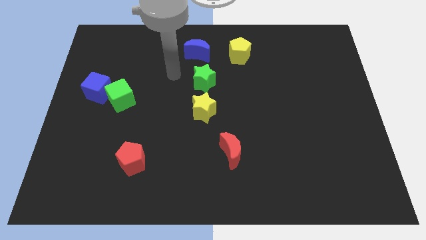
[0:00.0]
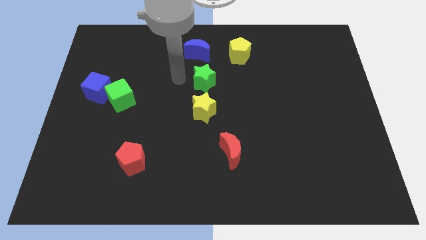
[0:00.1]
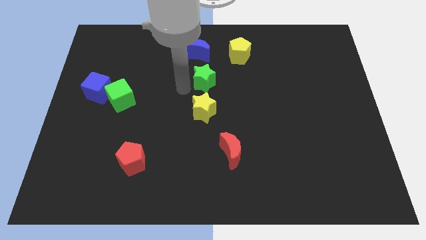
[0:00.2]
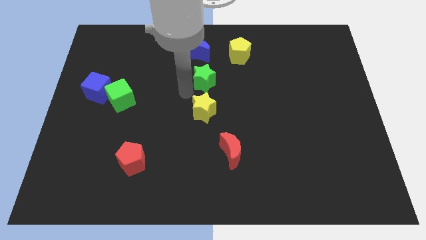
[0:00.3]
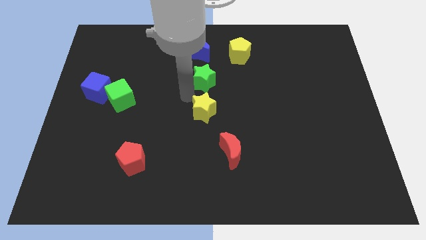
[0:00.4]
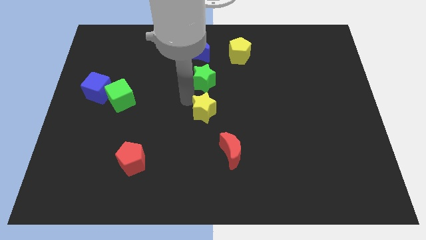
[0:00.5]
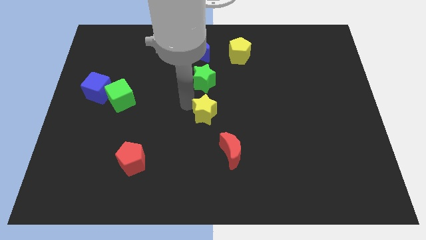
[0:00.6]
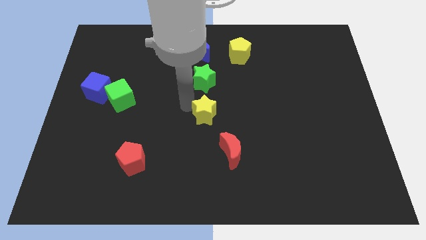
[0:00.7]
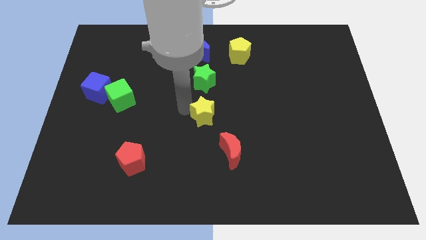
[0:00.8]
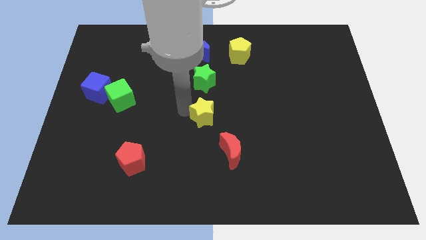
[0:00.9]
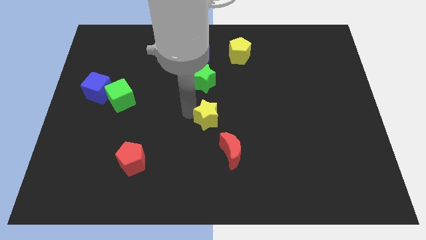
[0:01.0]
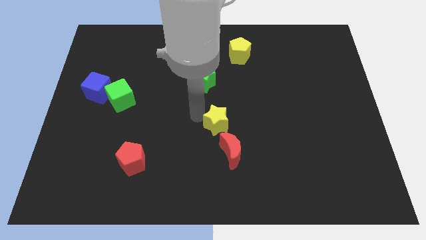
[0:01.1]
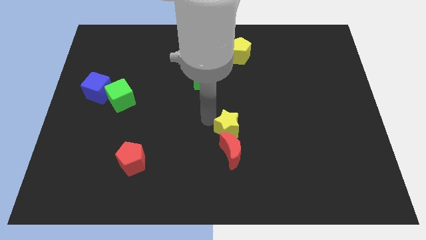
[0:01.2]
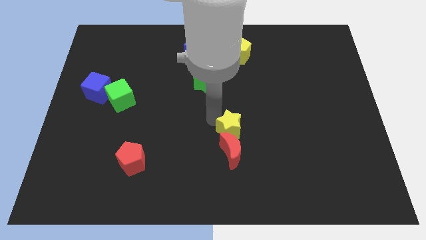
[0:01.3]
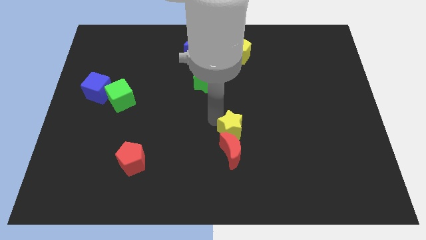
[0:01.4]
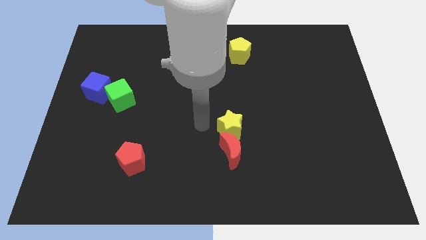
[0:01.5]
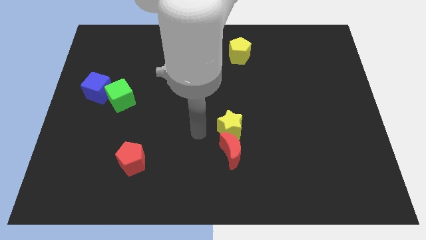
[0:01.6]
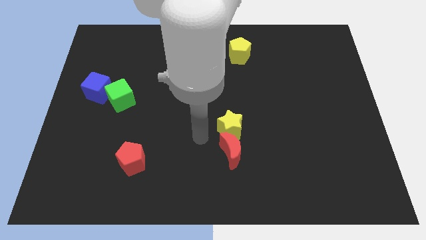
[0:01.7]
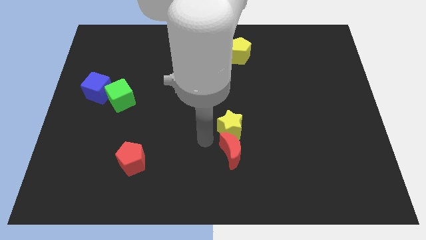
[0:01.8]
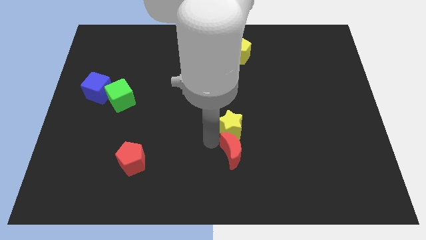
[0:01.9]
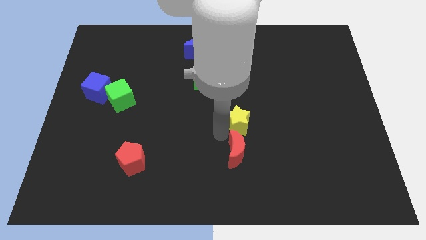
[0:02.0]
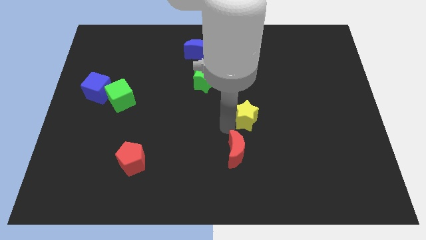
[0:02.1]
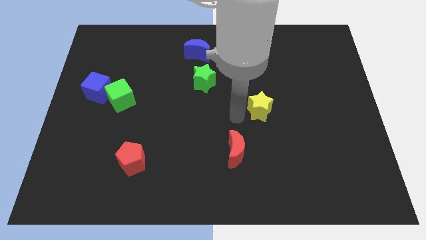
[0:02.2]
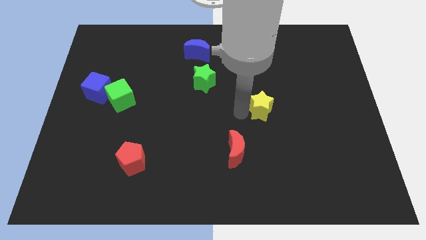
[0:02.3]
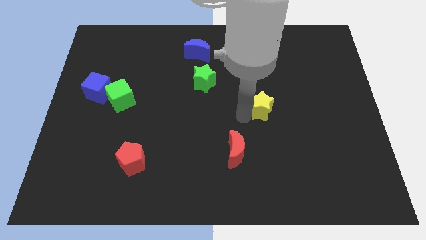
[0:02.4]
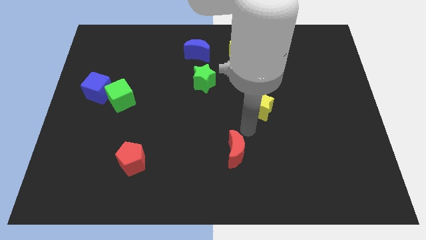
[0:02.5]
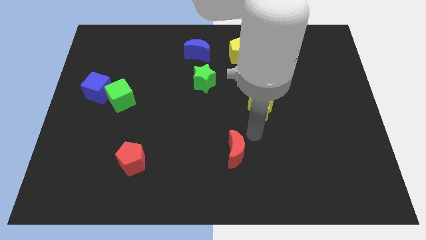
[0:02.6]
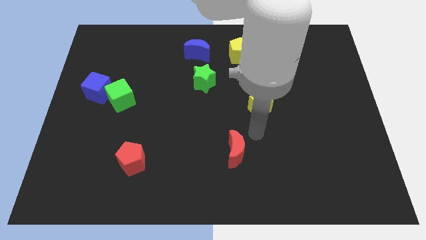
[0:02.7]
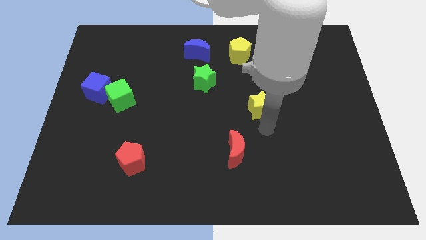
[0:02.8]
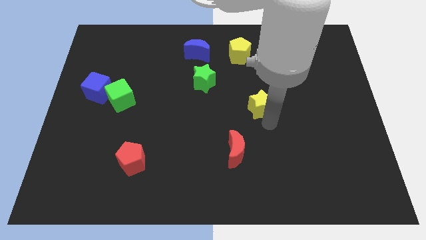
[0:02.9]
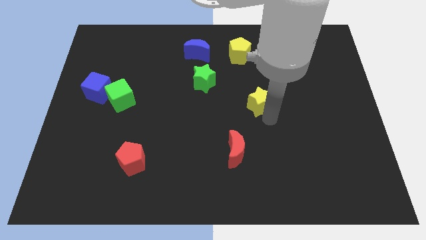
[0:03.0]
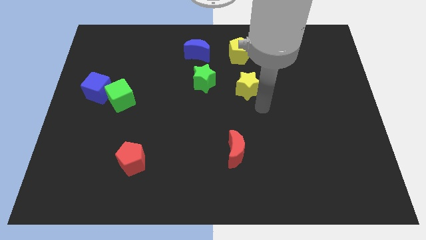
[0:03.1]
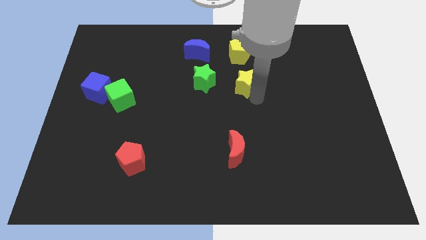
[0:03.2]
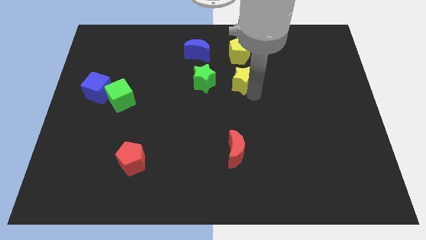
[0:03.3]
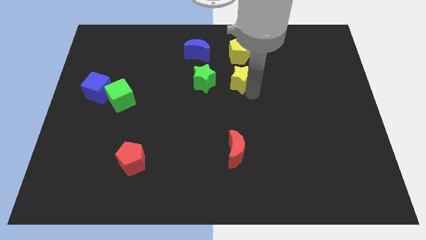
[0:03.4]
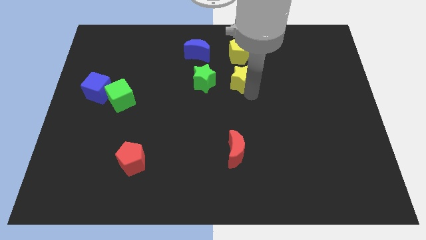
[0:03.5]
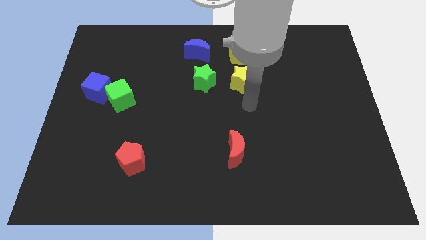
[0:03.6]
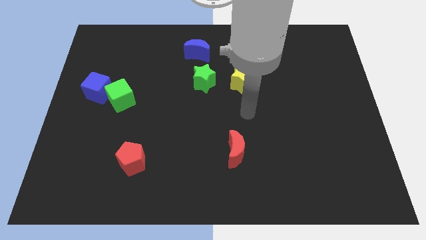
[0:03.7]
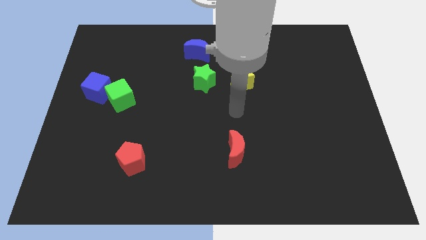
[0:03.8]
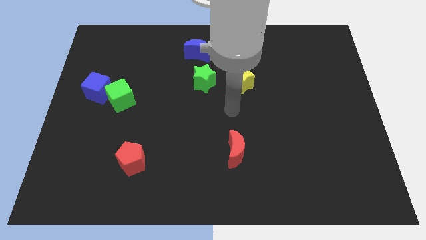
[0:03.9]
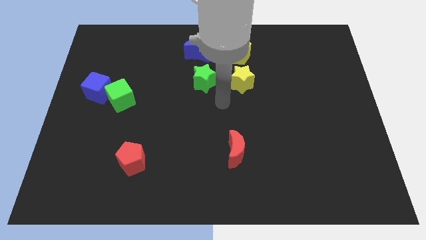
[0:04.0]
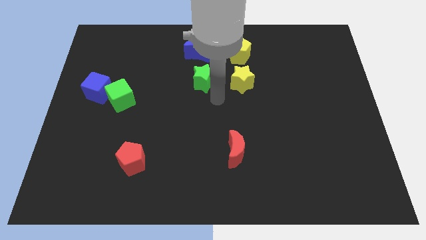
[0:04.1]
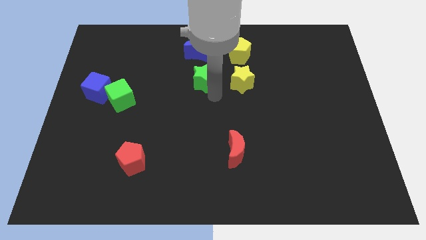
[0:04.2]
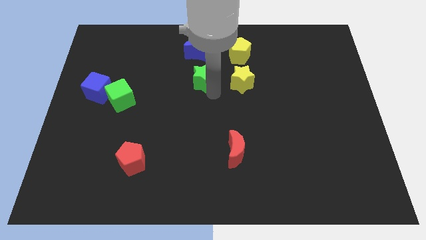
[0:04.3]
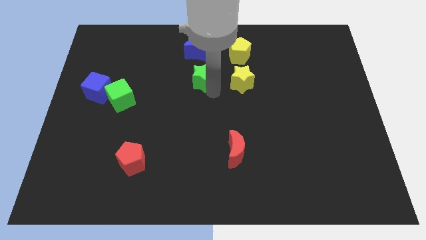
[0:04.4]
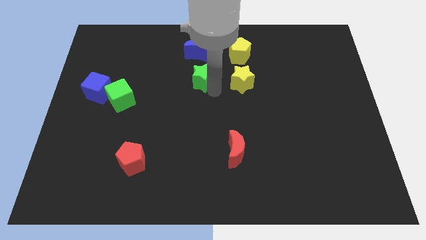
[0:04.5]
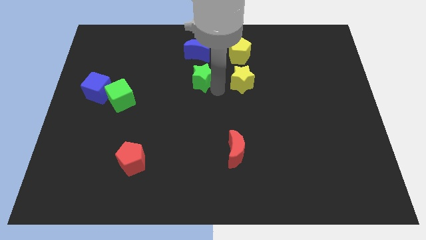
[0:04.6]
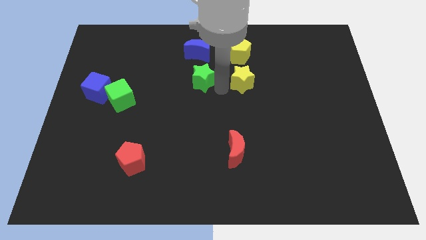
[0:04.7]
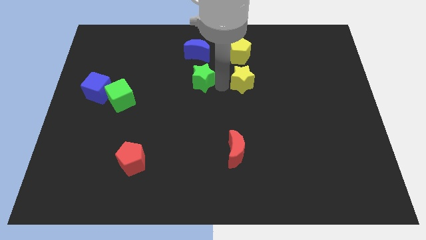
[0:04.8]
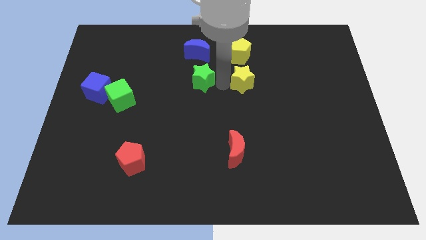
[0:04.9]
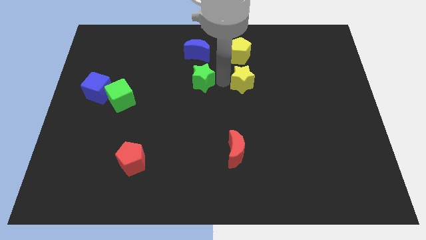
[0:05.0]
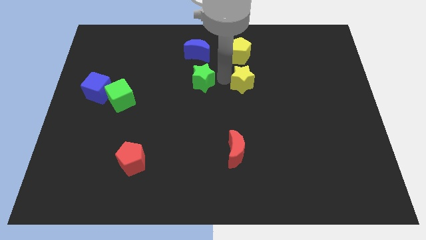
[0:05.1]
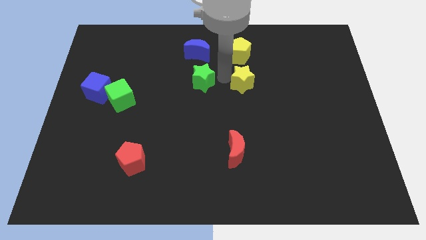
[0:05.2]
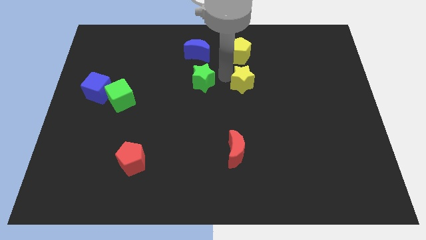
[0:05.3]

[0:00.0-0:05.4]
move the yellow star in a vertical line with yellow pentagon

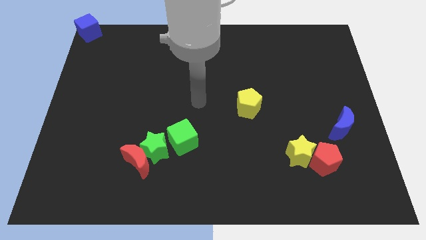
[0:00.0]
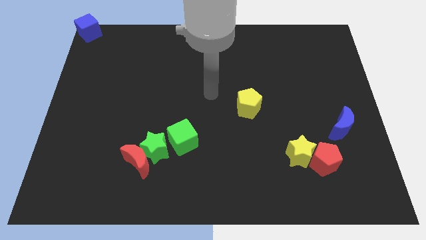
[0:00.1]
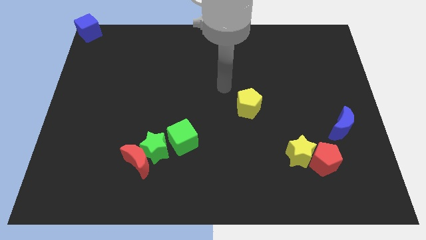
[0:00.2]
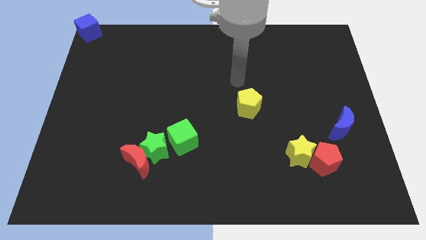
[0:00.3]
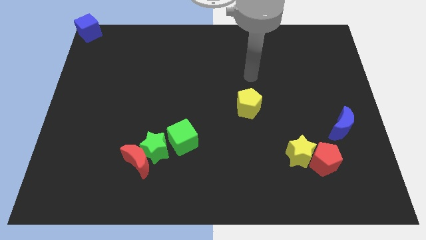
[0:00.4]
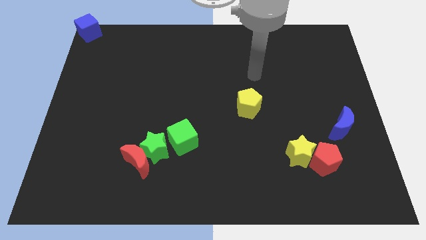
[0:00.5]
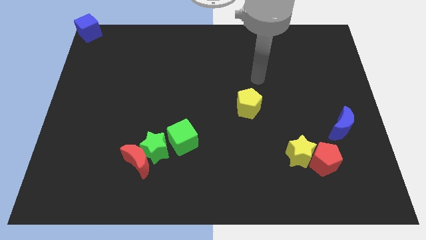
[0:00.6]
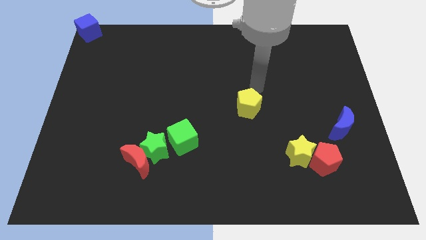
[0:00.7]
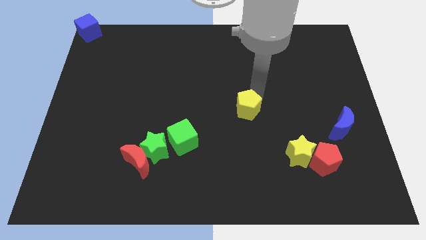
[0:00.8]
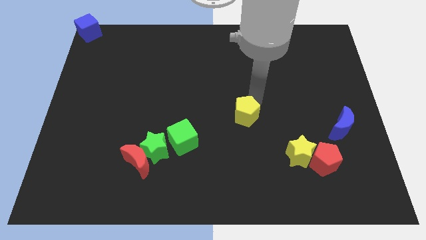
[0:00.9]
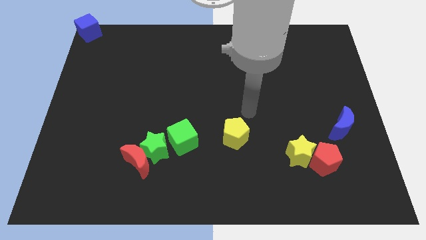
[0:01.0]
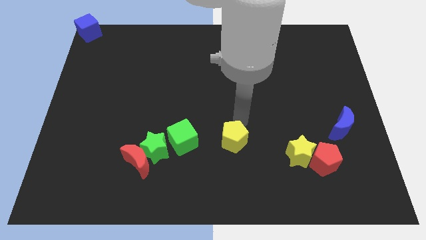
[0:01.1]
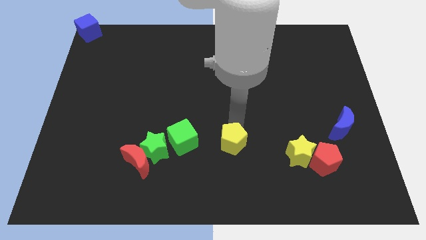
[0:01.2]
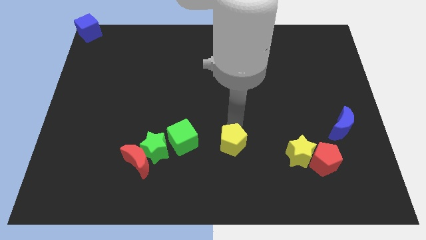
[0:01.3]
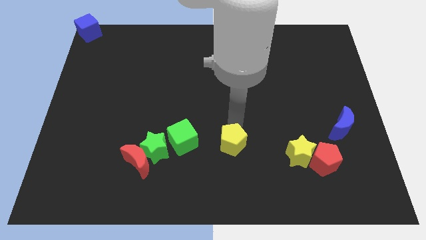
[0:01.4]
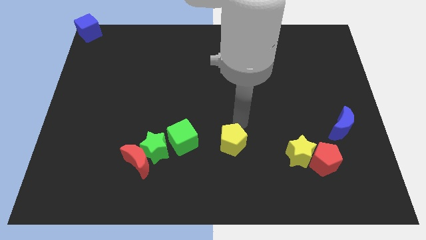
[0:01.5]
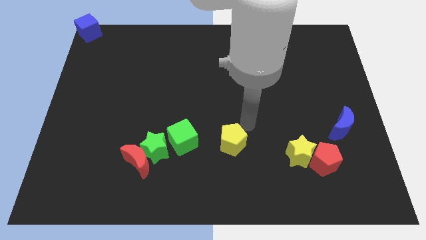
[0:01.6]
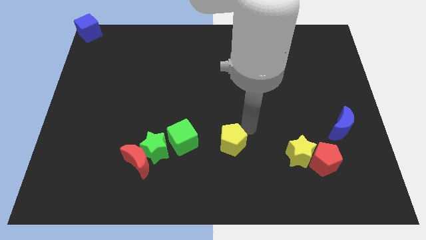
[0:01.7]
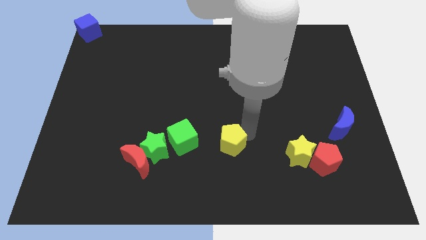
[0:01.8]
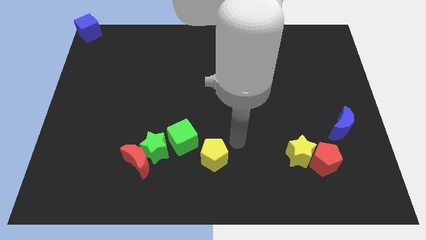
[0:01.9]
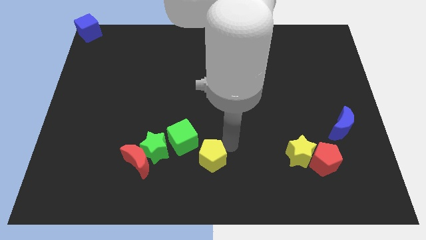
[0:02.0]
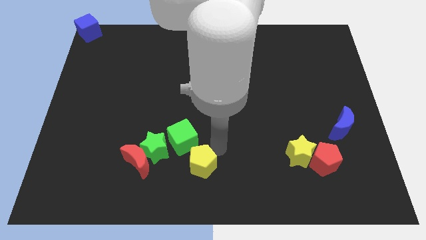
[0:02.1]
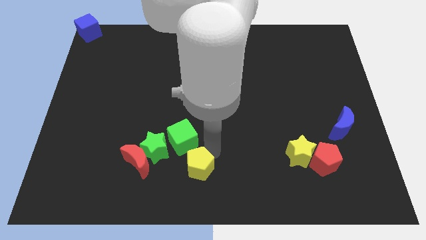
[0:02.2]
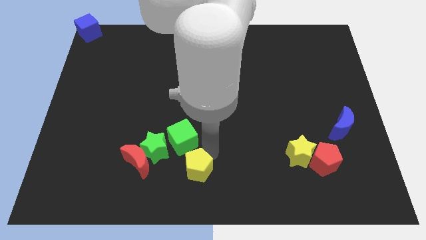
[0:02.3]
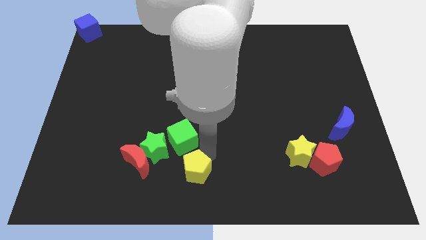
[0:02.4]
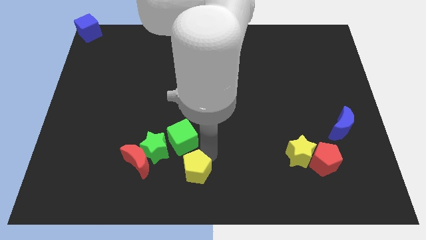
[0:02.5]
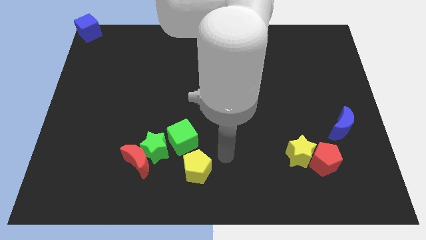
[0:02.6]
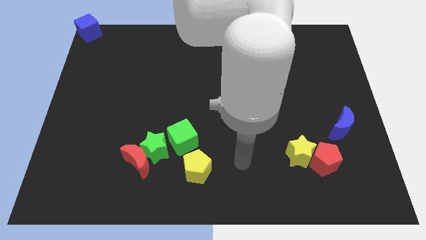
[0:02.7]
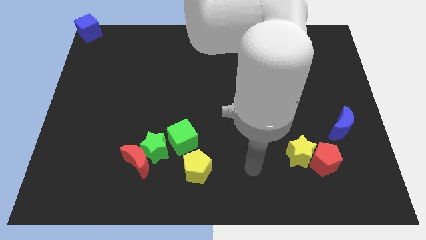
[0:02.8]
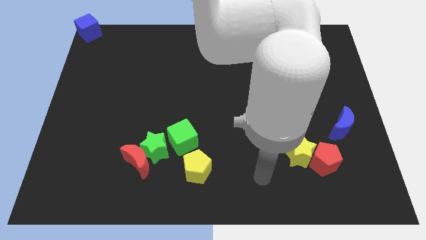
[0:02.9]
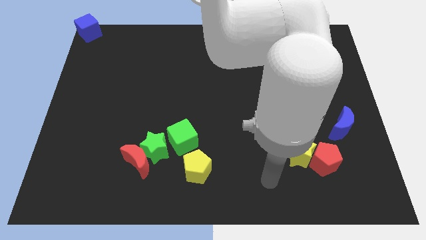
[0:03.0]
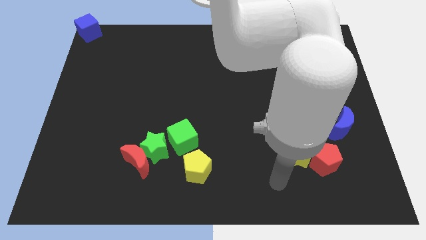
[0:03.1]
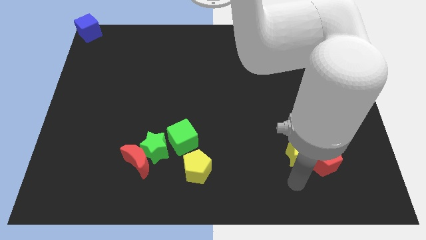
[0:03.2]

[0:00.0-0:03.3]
place the yellow pentagon below the green cube

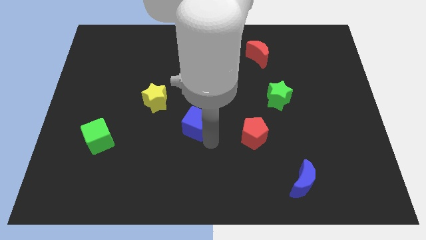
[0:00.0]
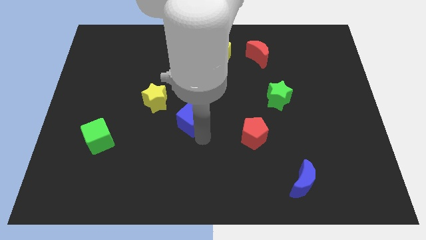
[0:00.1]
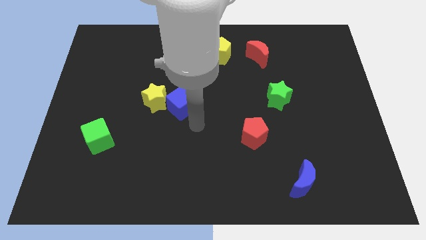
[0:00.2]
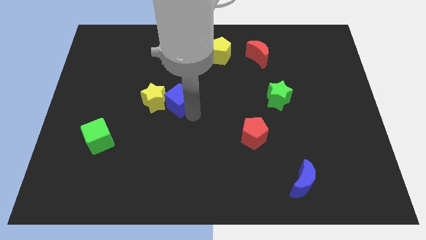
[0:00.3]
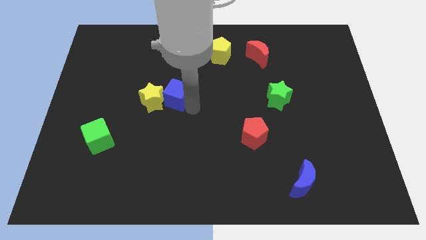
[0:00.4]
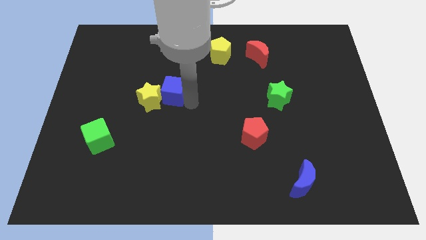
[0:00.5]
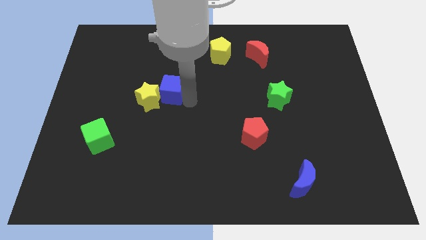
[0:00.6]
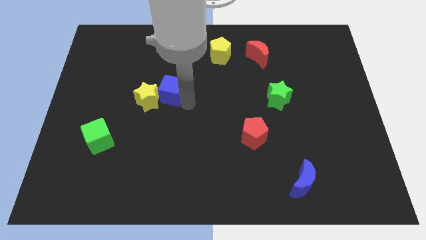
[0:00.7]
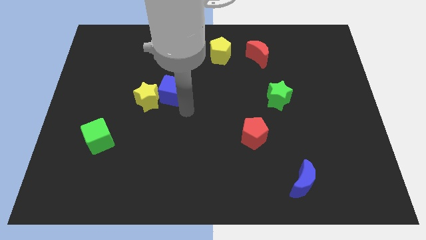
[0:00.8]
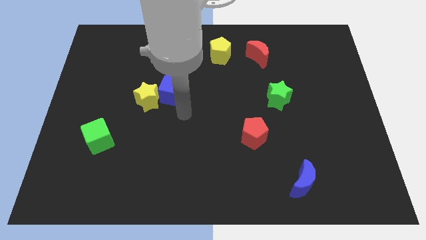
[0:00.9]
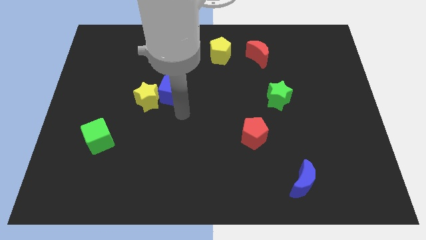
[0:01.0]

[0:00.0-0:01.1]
move blue cube into yellow star
